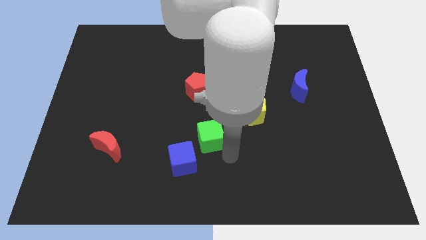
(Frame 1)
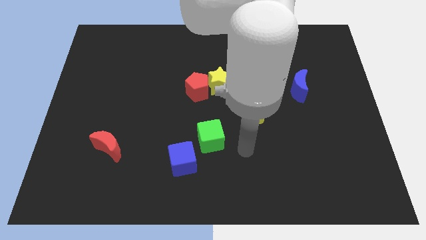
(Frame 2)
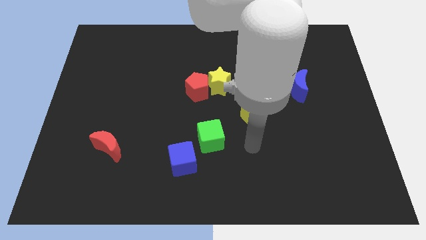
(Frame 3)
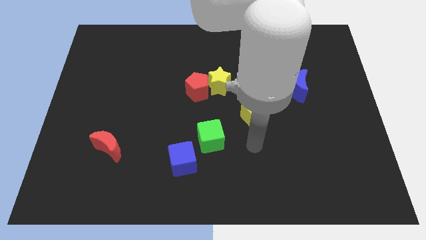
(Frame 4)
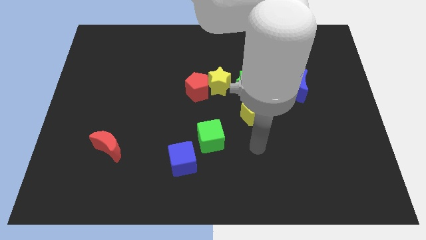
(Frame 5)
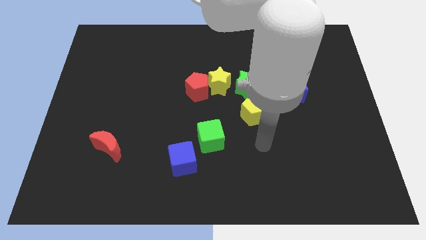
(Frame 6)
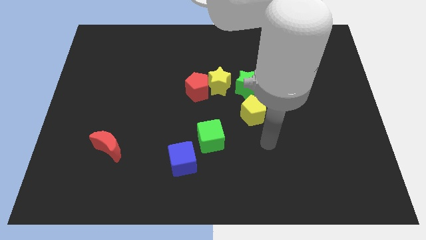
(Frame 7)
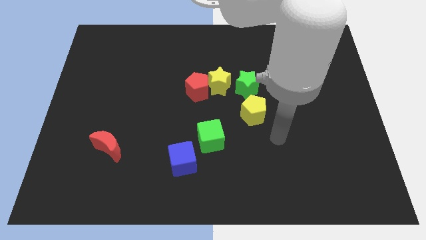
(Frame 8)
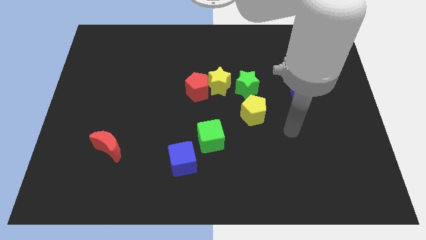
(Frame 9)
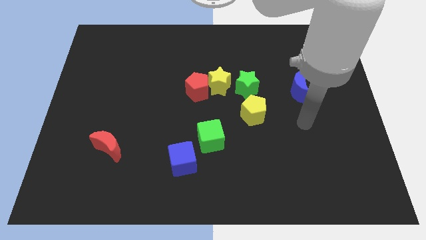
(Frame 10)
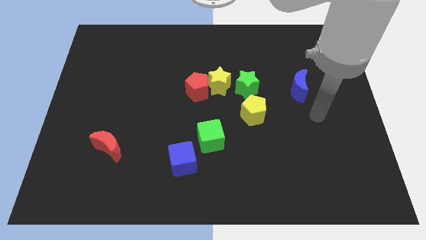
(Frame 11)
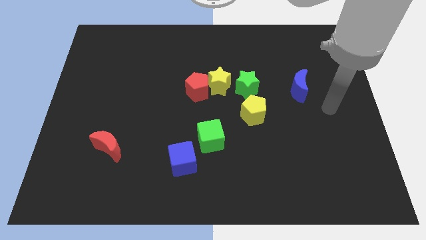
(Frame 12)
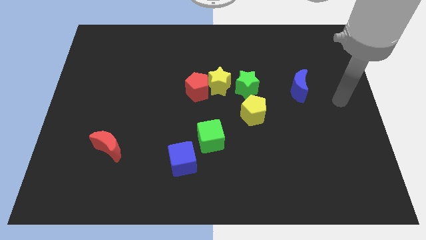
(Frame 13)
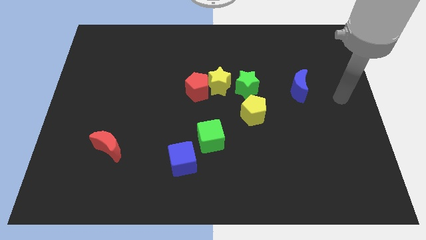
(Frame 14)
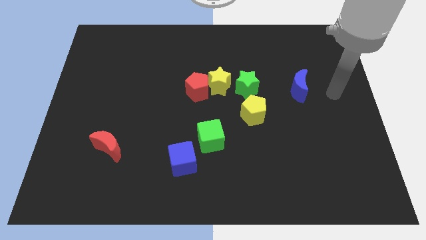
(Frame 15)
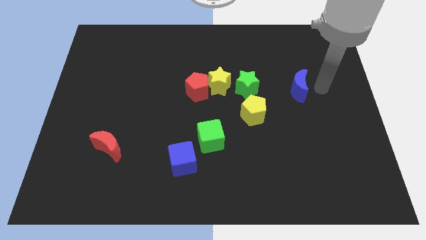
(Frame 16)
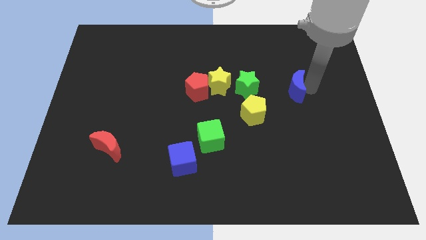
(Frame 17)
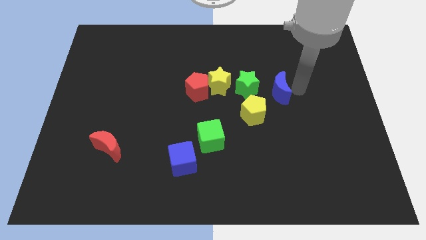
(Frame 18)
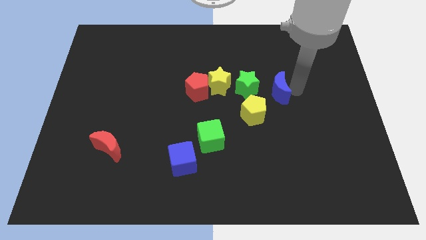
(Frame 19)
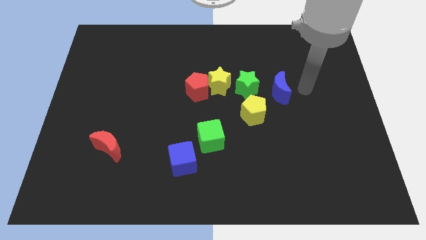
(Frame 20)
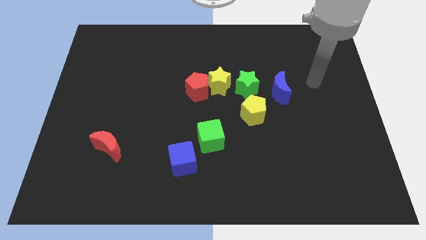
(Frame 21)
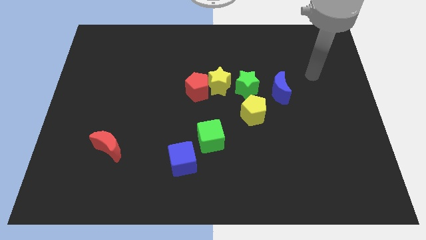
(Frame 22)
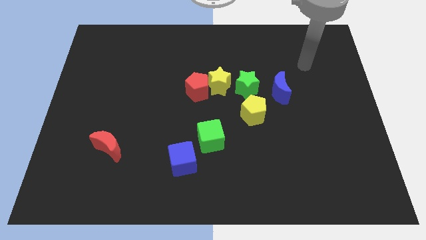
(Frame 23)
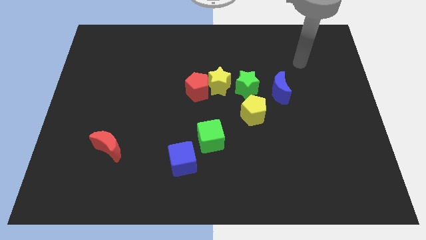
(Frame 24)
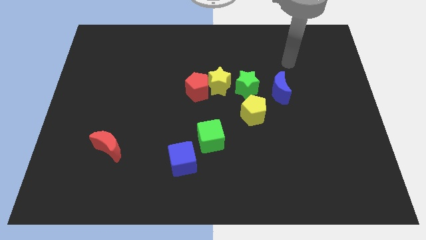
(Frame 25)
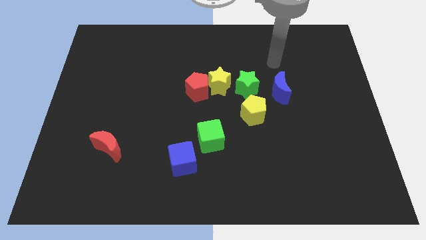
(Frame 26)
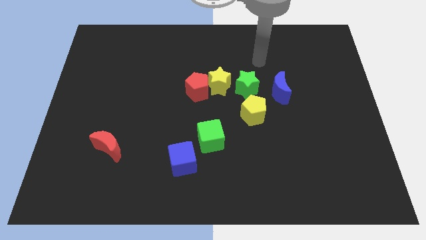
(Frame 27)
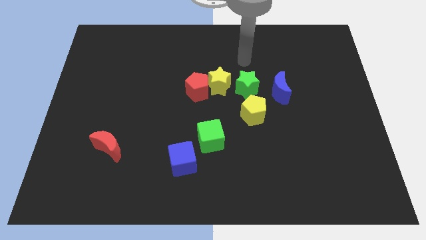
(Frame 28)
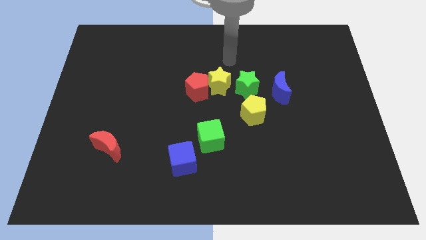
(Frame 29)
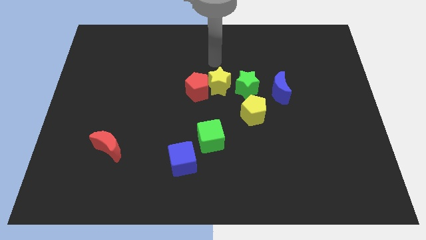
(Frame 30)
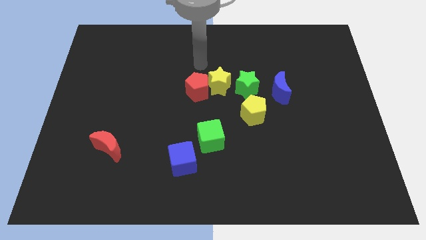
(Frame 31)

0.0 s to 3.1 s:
push the blue moon towards the center

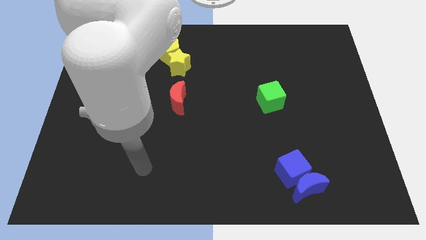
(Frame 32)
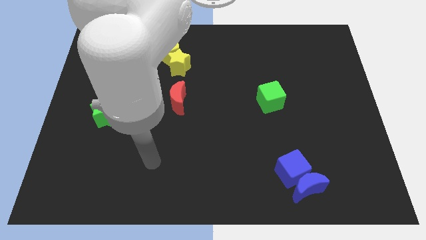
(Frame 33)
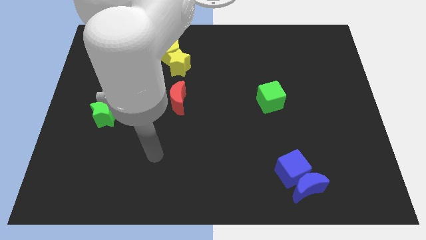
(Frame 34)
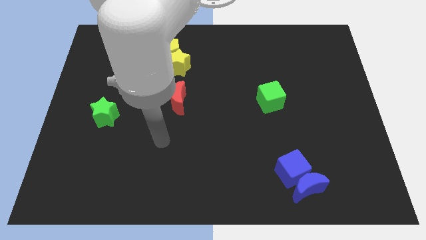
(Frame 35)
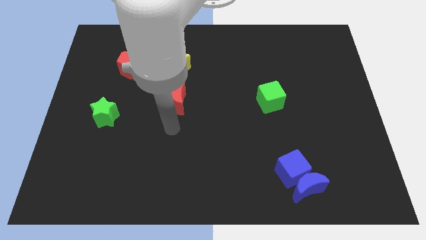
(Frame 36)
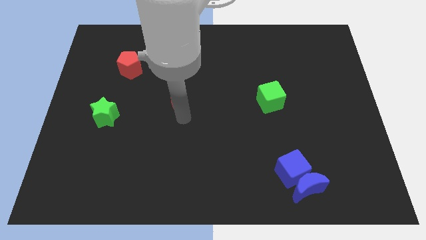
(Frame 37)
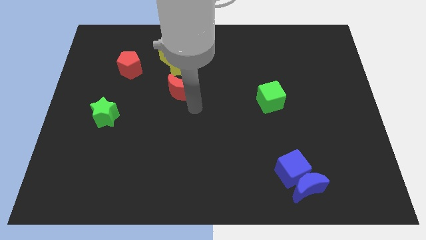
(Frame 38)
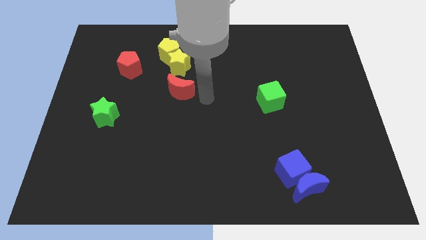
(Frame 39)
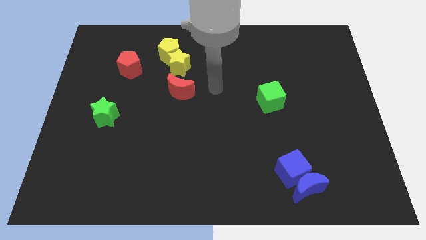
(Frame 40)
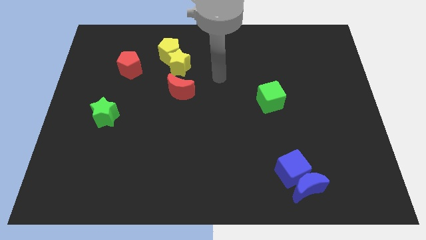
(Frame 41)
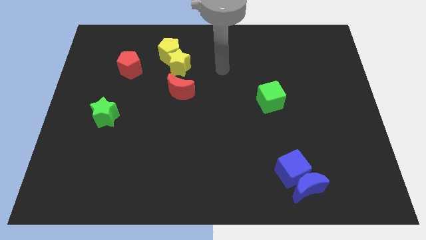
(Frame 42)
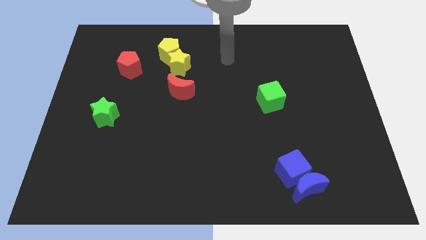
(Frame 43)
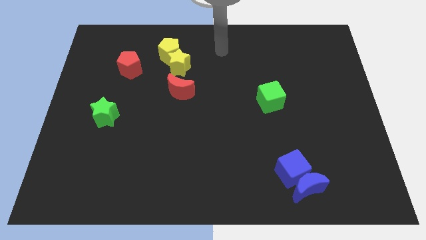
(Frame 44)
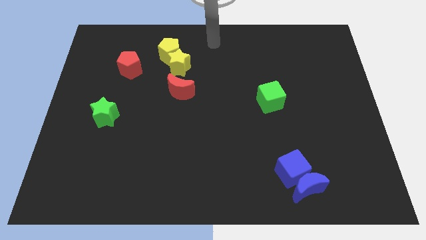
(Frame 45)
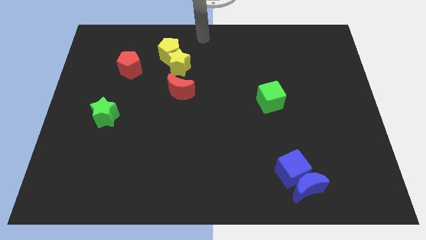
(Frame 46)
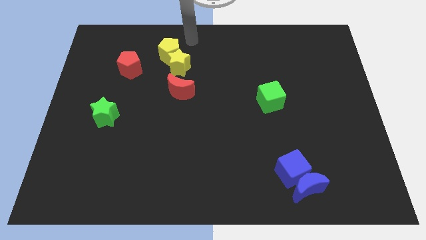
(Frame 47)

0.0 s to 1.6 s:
move your arm to the top centre of the board

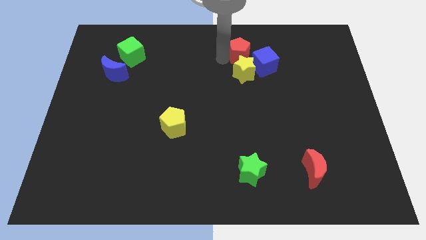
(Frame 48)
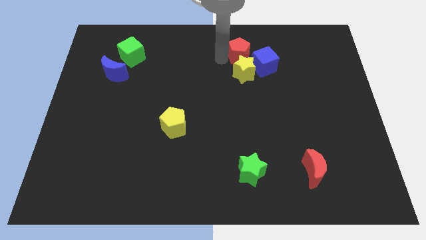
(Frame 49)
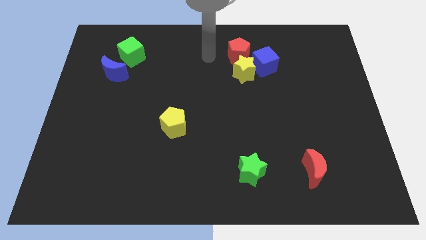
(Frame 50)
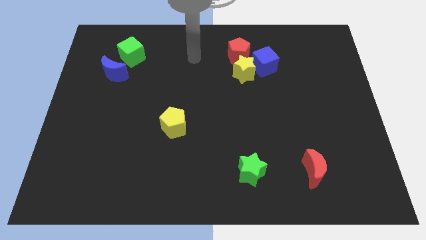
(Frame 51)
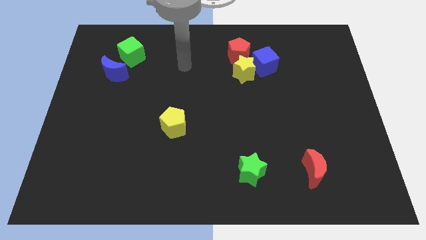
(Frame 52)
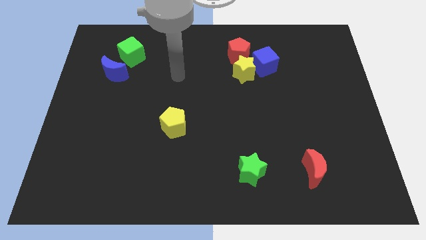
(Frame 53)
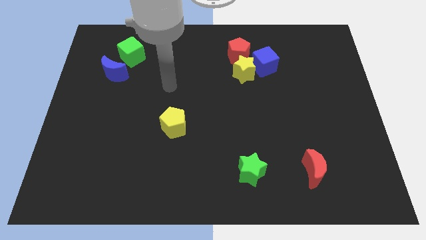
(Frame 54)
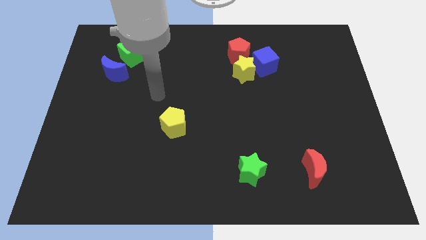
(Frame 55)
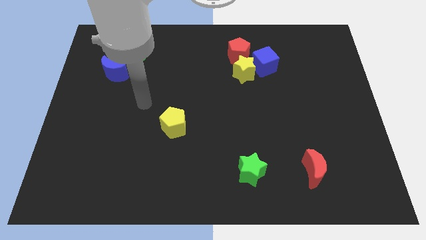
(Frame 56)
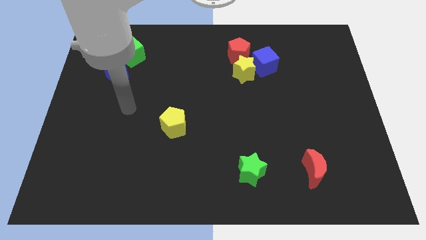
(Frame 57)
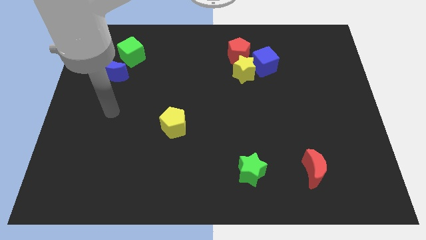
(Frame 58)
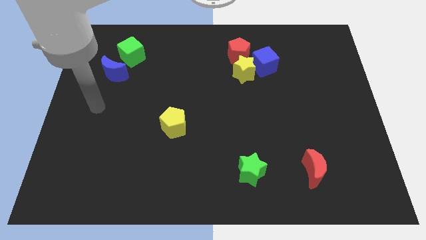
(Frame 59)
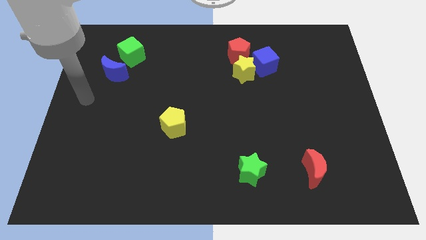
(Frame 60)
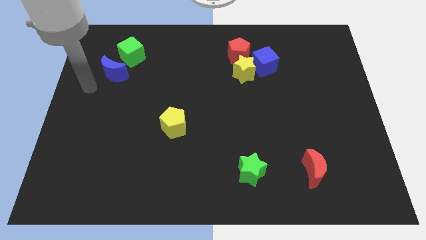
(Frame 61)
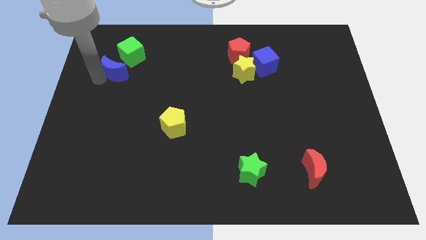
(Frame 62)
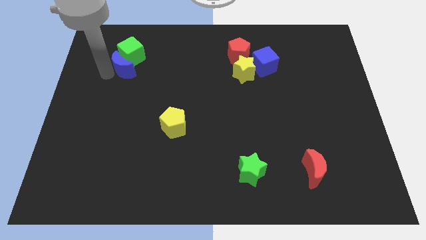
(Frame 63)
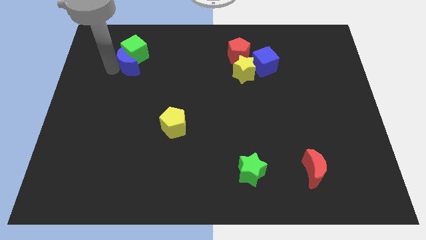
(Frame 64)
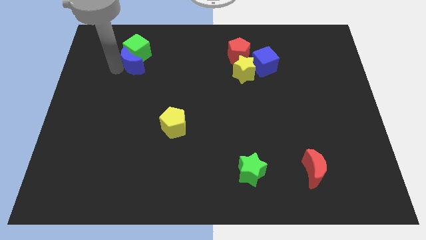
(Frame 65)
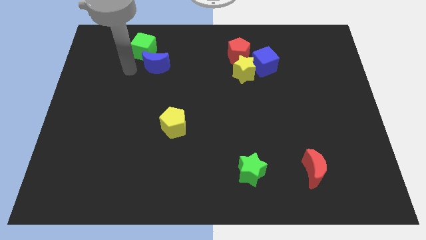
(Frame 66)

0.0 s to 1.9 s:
push the blue moon into the green cube

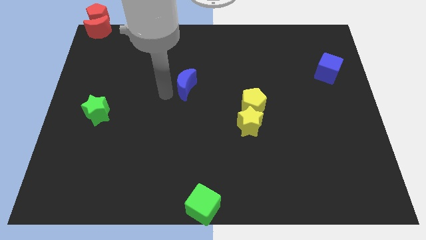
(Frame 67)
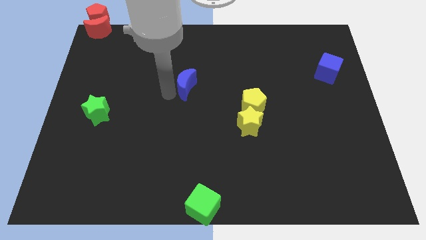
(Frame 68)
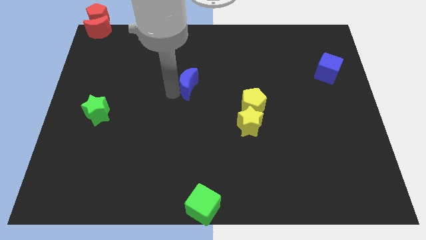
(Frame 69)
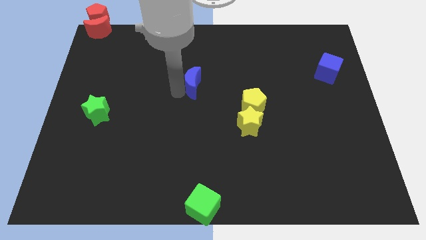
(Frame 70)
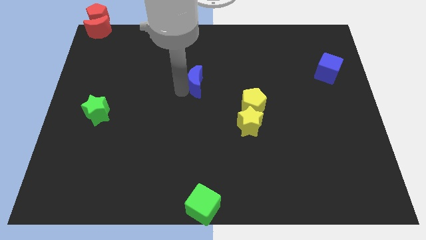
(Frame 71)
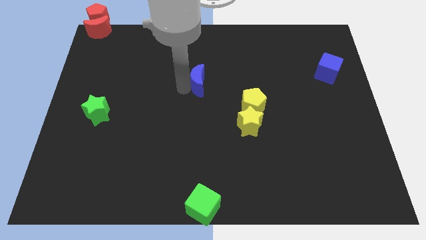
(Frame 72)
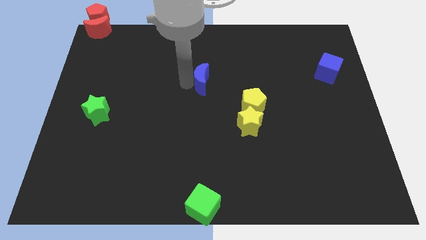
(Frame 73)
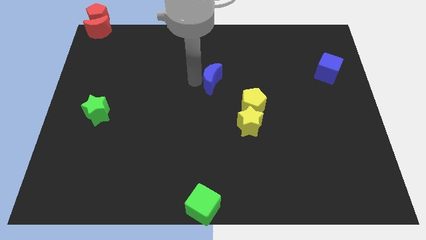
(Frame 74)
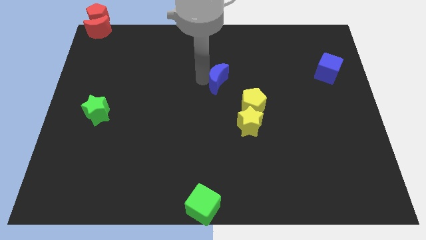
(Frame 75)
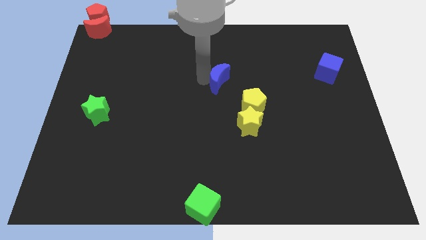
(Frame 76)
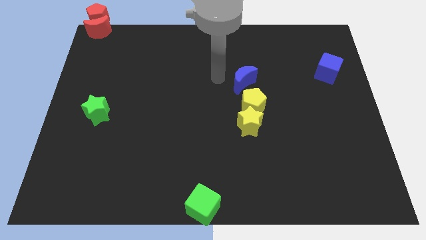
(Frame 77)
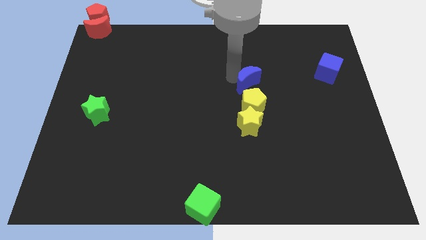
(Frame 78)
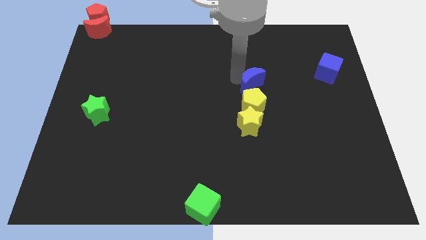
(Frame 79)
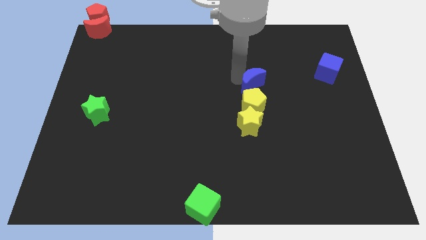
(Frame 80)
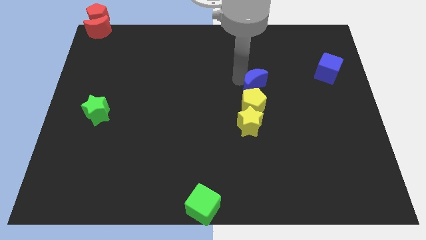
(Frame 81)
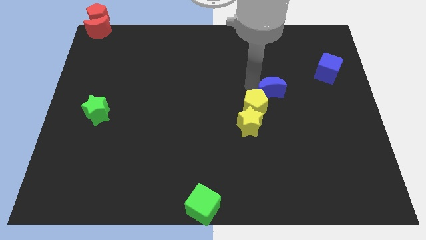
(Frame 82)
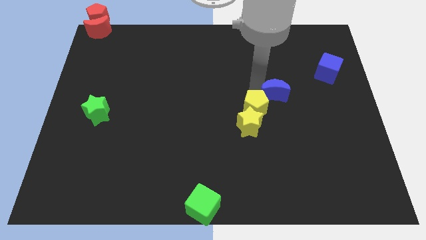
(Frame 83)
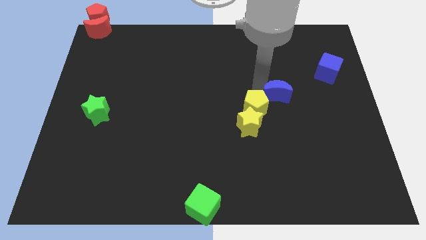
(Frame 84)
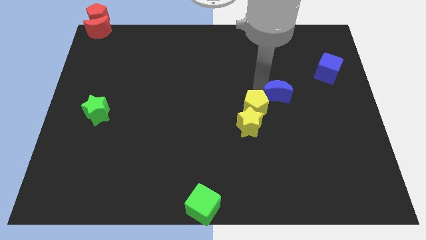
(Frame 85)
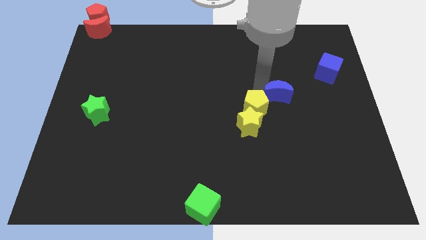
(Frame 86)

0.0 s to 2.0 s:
push the blue moon to the top right to the yellow pentagon

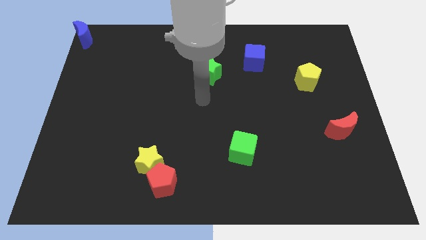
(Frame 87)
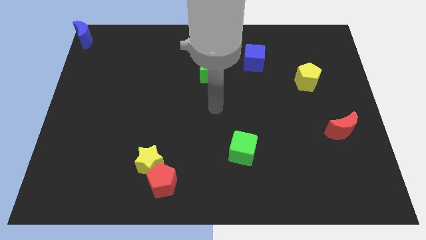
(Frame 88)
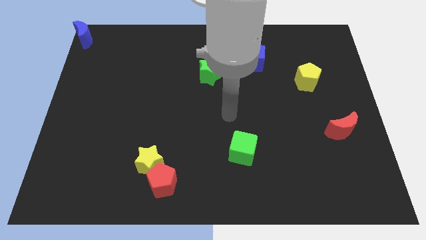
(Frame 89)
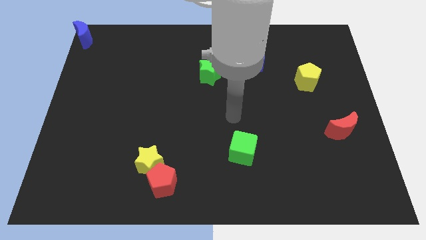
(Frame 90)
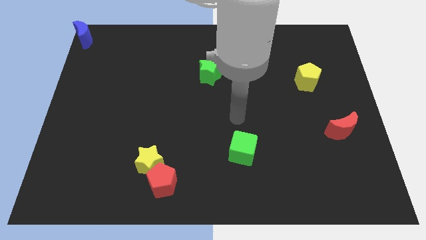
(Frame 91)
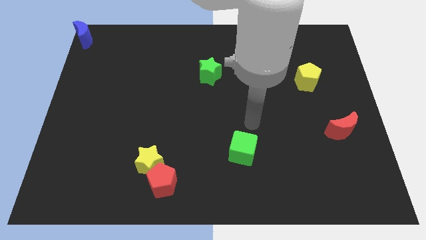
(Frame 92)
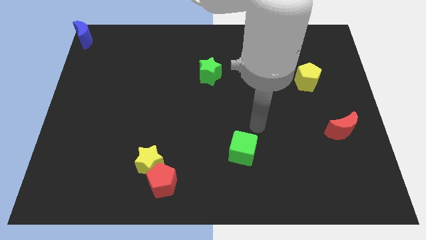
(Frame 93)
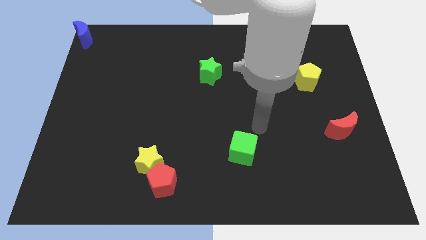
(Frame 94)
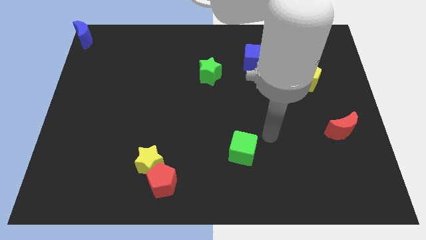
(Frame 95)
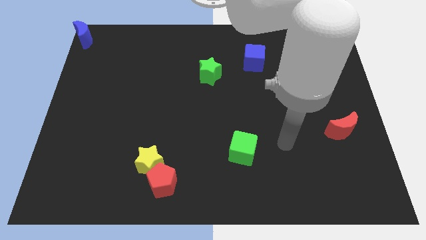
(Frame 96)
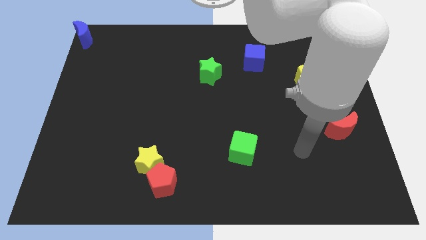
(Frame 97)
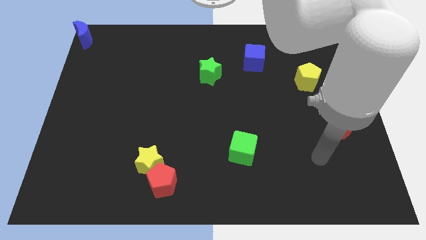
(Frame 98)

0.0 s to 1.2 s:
move your arm towards the bottom right corner of the board
